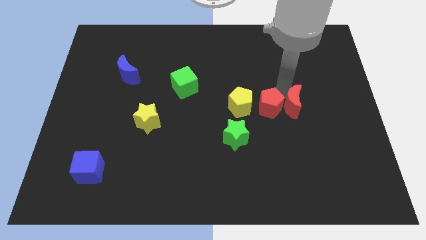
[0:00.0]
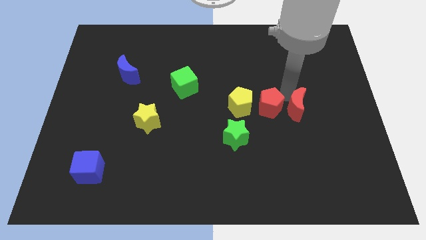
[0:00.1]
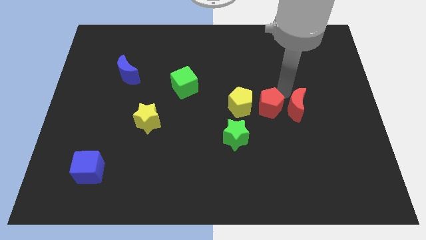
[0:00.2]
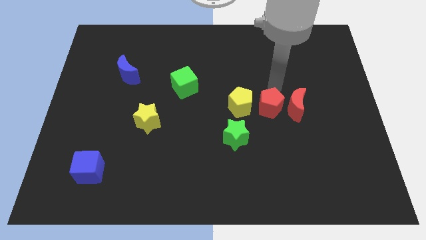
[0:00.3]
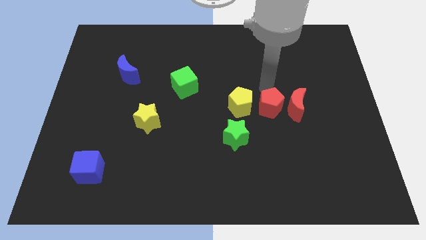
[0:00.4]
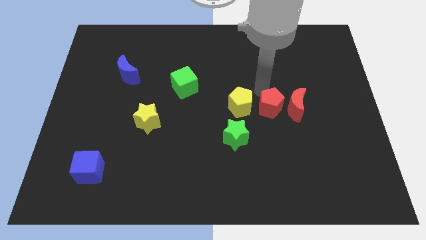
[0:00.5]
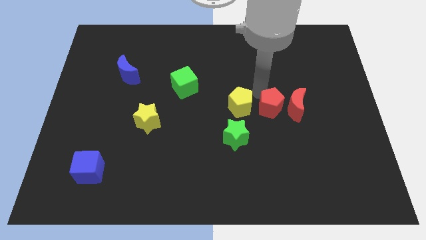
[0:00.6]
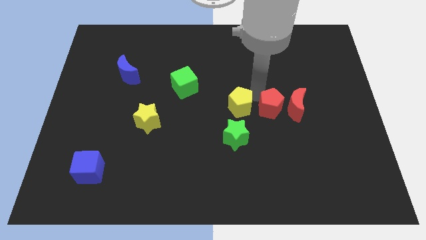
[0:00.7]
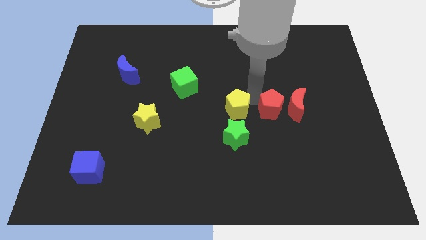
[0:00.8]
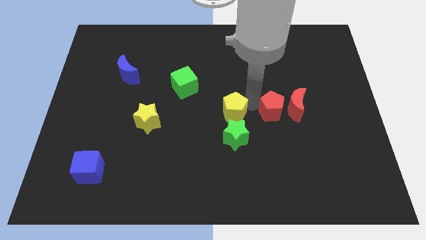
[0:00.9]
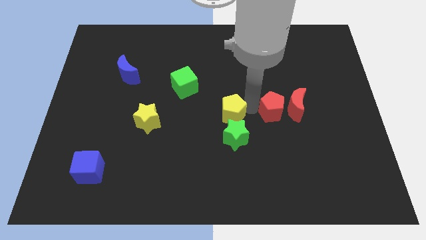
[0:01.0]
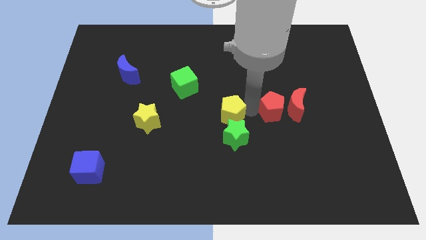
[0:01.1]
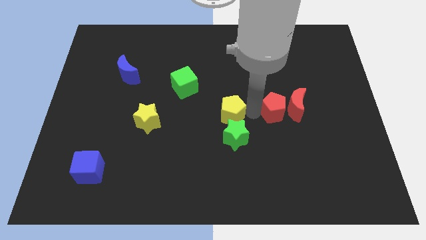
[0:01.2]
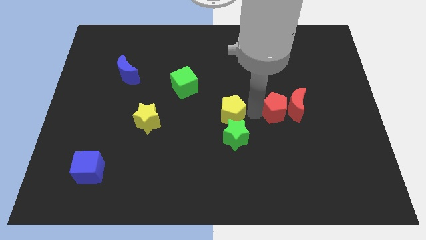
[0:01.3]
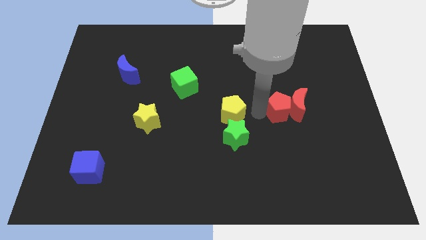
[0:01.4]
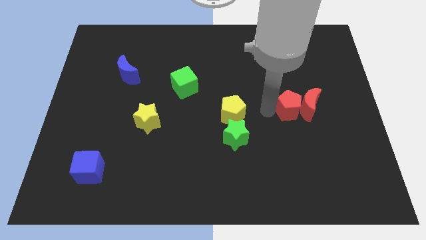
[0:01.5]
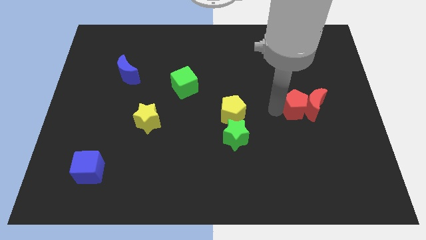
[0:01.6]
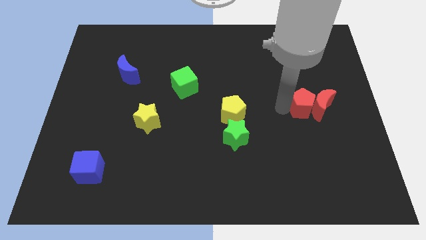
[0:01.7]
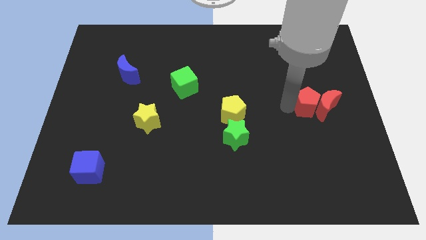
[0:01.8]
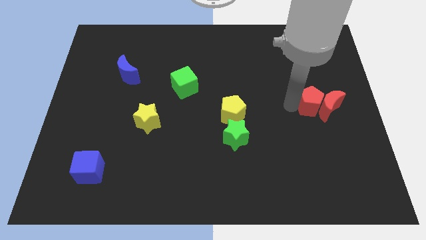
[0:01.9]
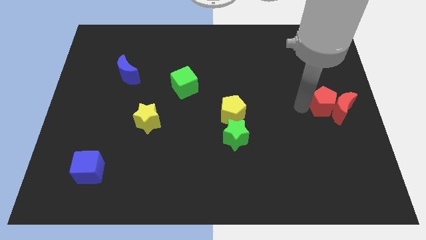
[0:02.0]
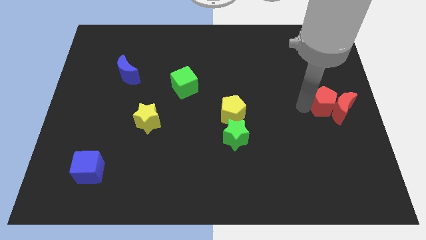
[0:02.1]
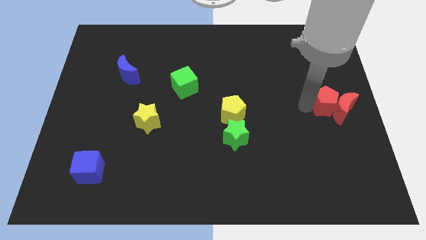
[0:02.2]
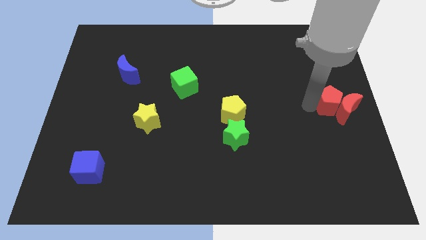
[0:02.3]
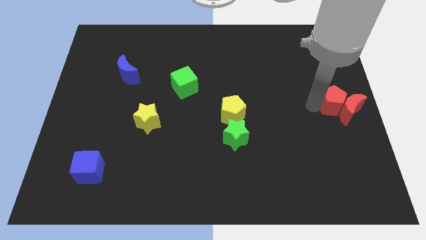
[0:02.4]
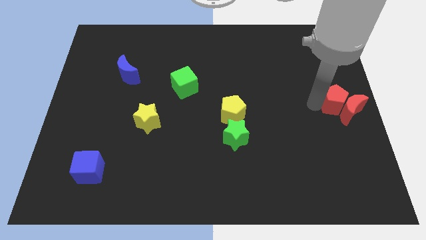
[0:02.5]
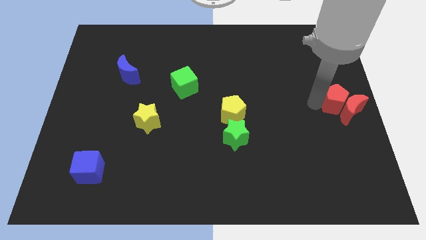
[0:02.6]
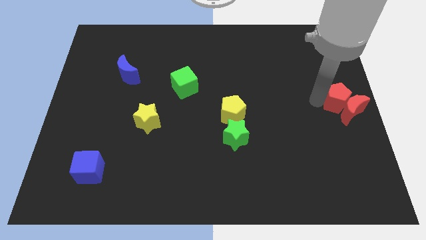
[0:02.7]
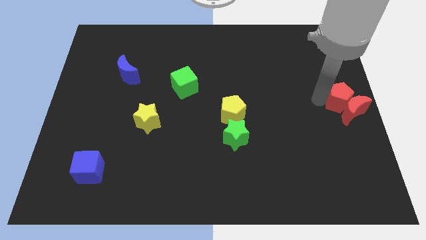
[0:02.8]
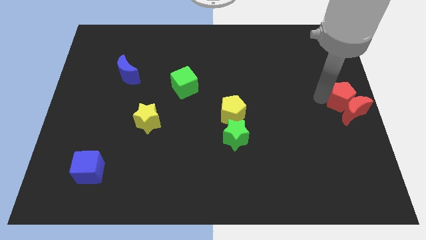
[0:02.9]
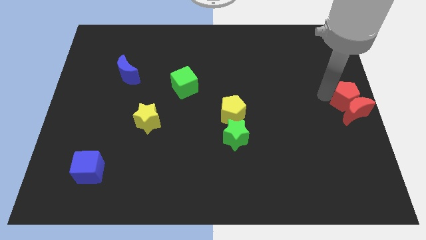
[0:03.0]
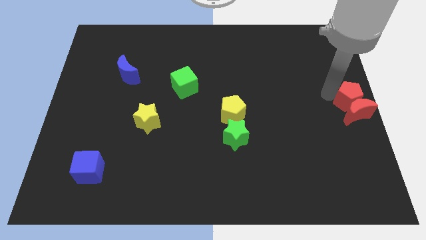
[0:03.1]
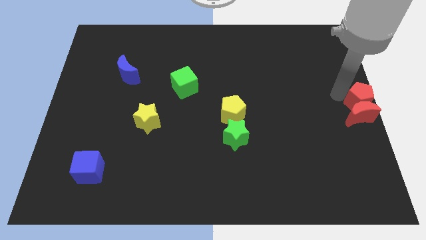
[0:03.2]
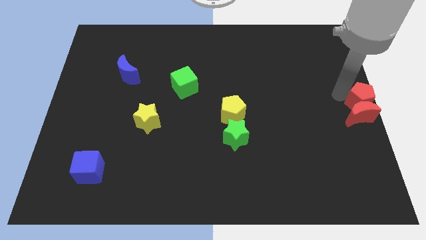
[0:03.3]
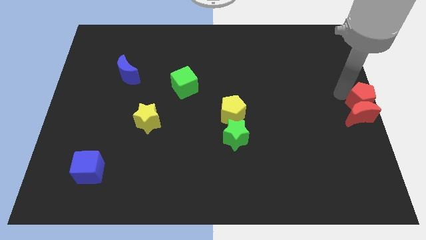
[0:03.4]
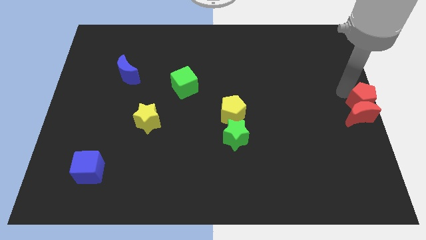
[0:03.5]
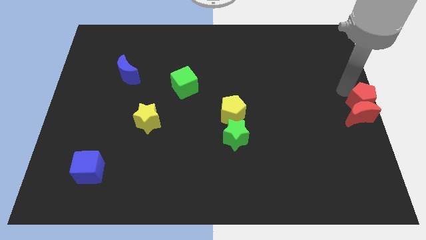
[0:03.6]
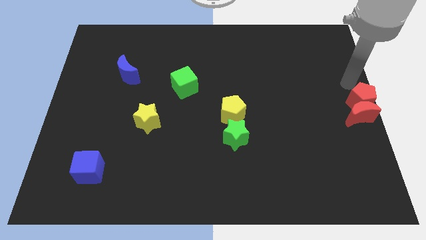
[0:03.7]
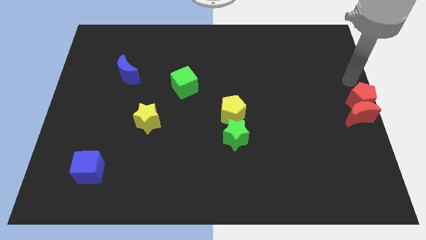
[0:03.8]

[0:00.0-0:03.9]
push the red crescent with the red pentagon towards the right center of the board

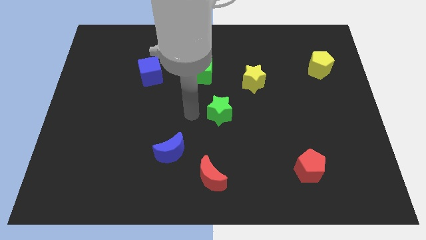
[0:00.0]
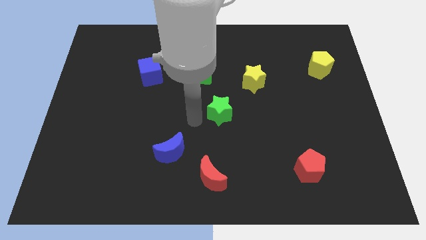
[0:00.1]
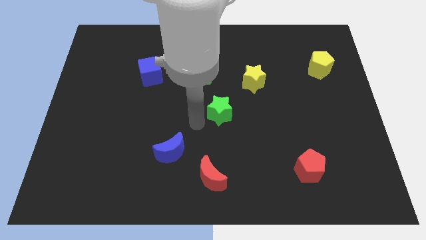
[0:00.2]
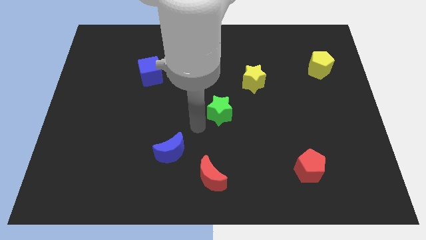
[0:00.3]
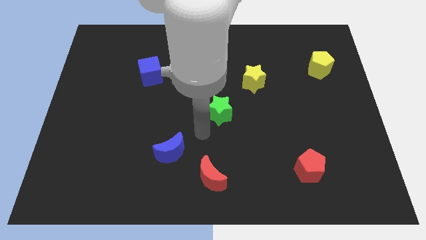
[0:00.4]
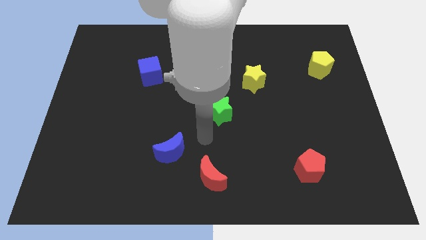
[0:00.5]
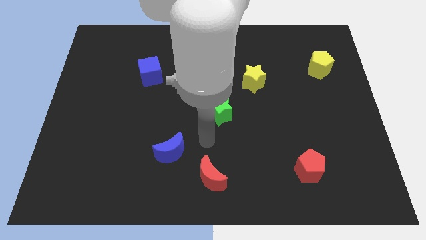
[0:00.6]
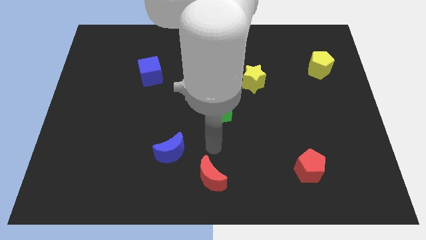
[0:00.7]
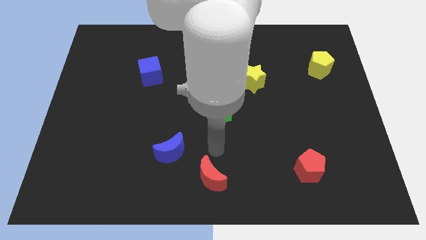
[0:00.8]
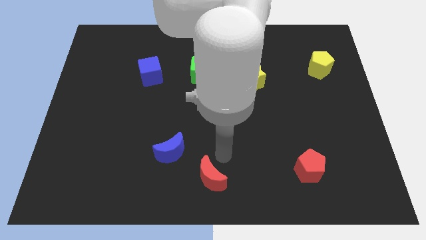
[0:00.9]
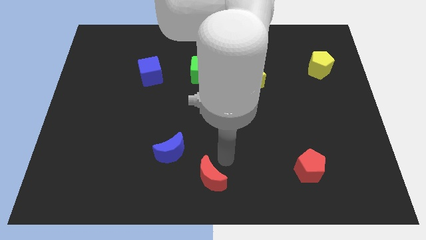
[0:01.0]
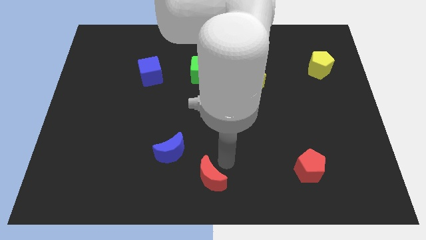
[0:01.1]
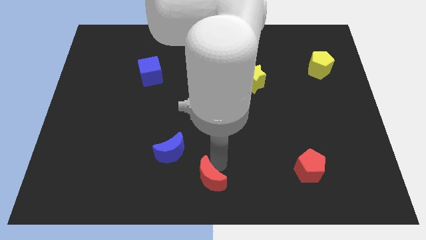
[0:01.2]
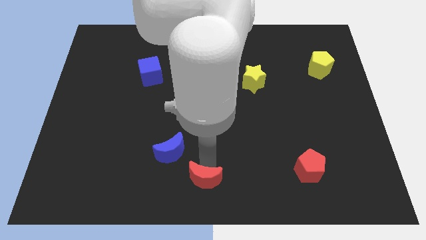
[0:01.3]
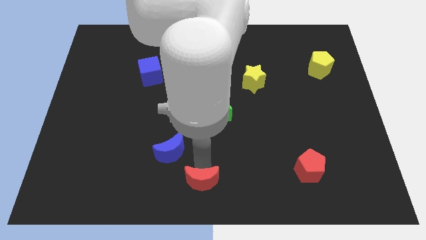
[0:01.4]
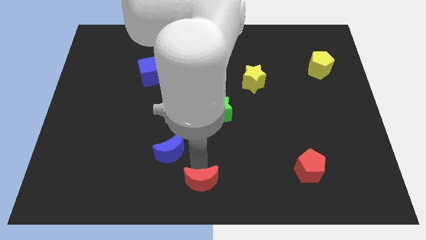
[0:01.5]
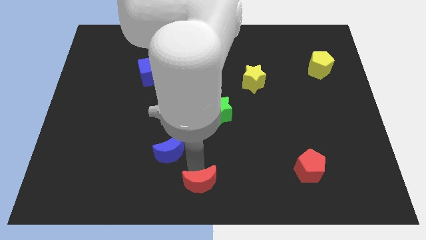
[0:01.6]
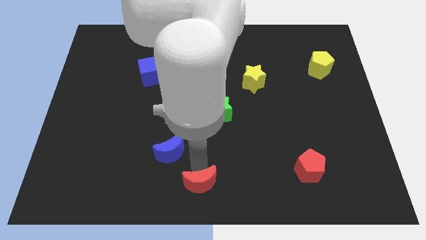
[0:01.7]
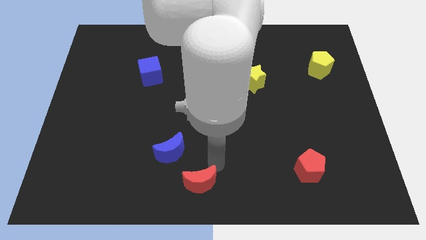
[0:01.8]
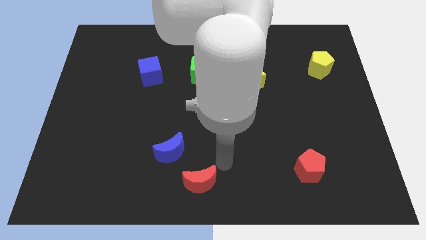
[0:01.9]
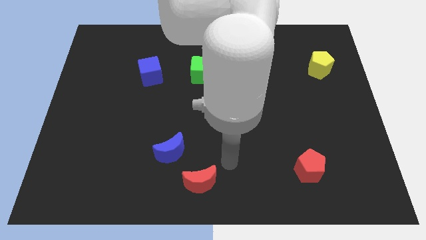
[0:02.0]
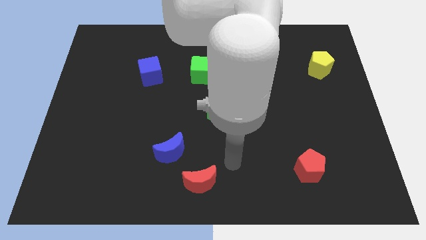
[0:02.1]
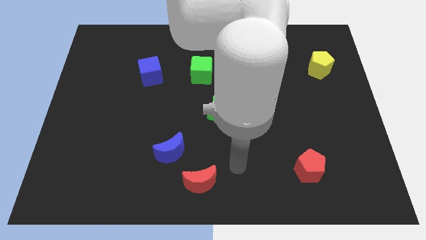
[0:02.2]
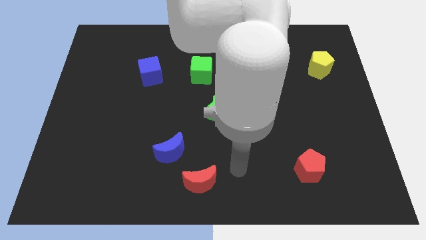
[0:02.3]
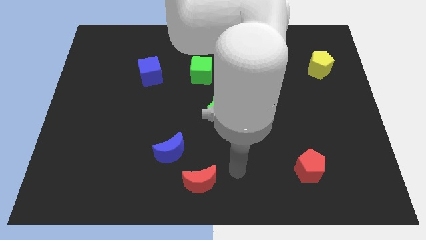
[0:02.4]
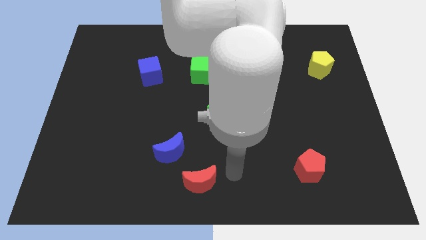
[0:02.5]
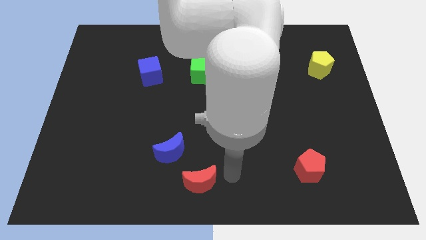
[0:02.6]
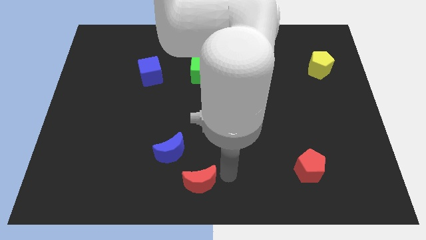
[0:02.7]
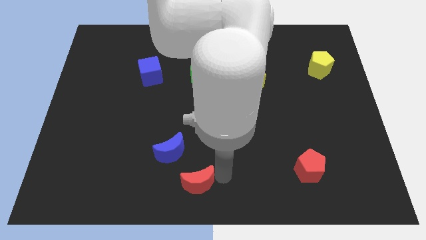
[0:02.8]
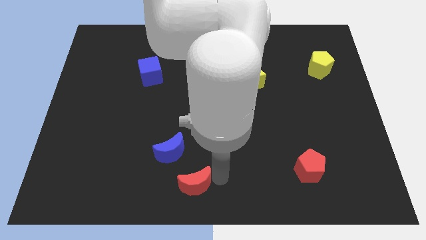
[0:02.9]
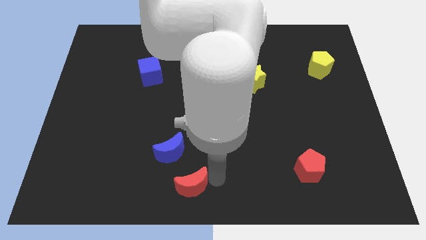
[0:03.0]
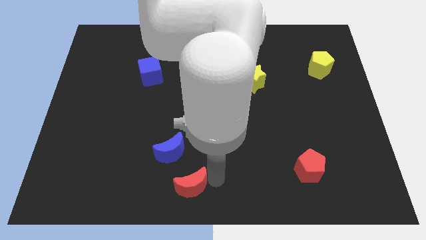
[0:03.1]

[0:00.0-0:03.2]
move red moon to the bottom right of blue moon

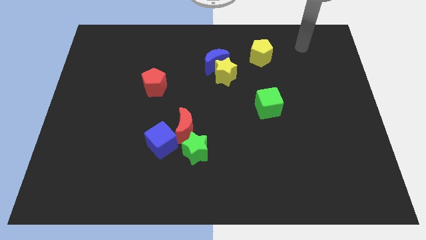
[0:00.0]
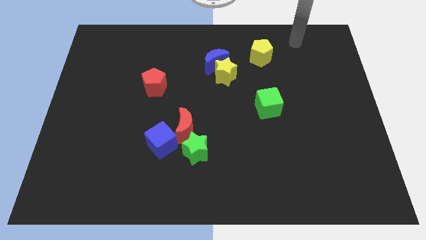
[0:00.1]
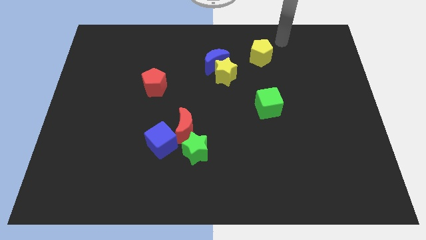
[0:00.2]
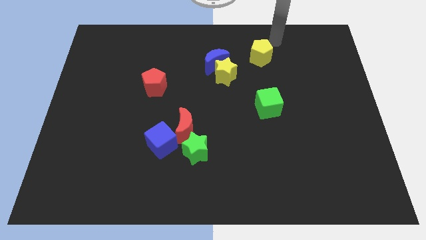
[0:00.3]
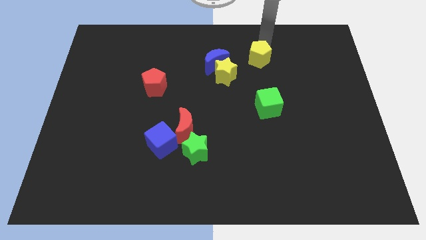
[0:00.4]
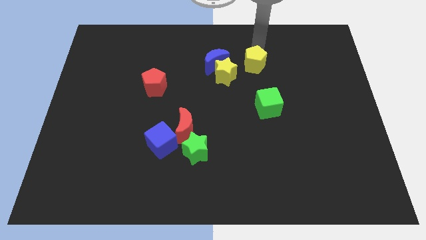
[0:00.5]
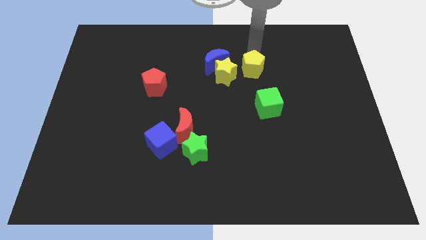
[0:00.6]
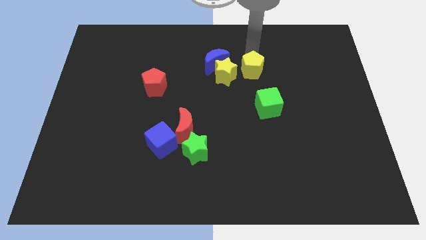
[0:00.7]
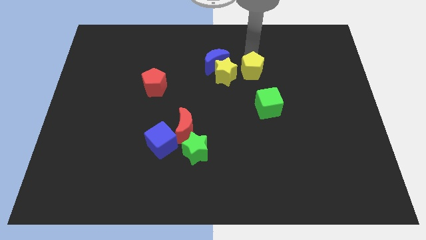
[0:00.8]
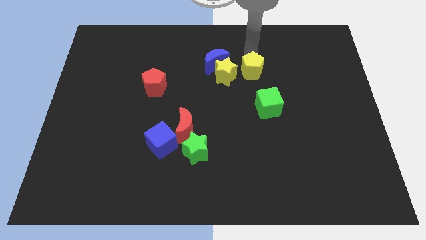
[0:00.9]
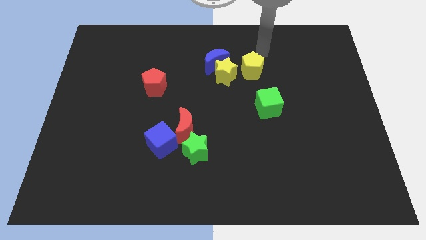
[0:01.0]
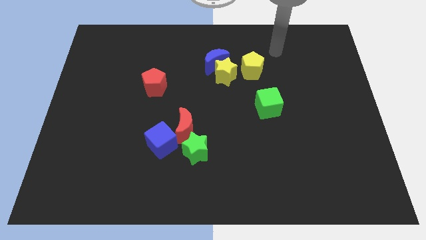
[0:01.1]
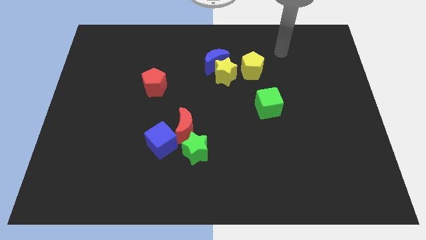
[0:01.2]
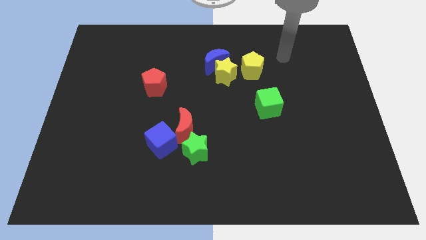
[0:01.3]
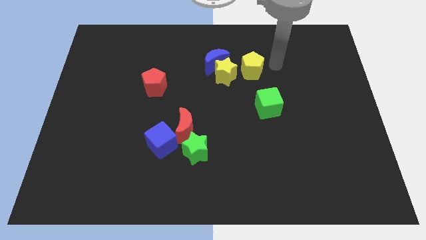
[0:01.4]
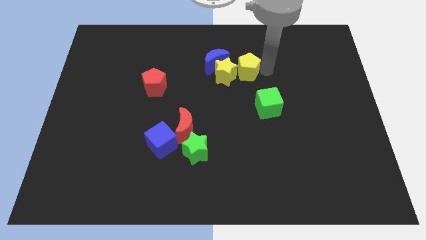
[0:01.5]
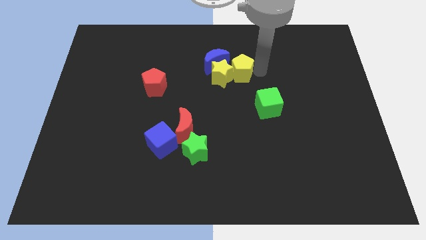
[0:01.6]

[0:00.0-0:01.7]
push the yellow pentagon into yellow star
